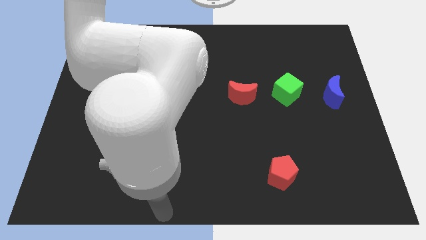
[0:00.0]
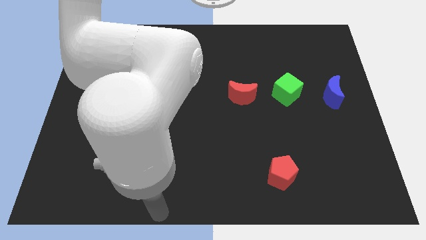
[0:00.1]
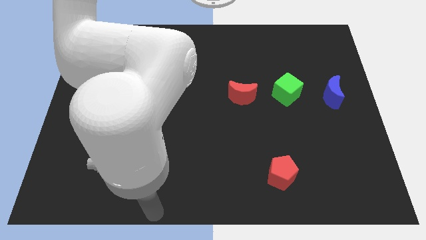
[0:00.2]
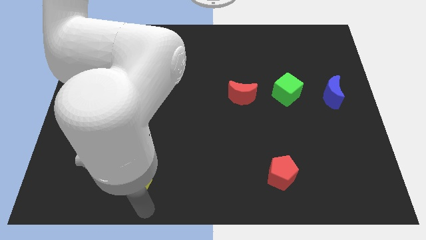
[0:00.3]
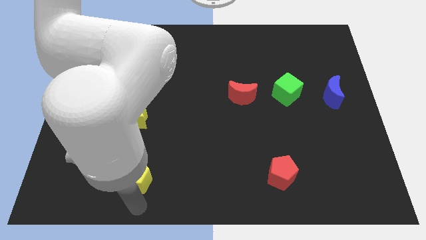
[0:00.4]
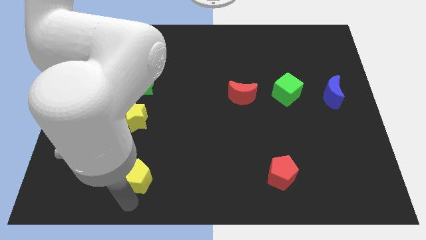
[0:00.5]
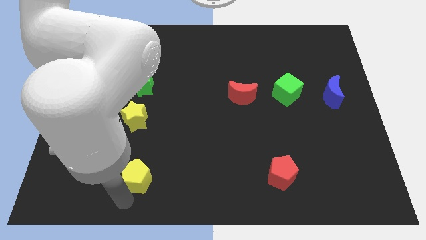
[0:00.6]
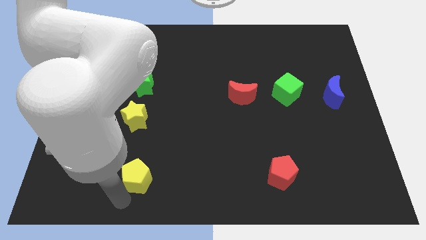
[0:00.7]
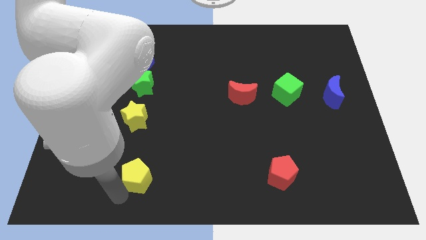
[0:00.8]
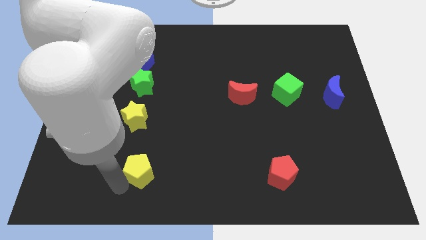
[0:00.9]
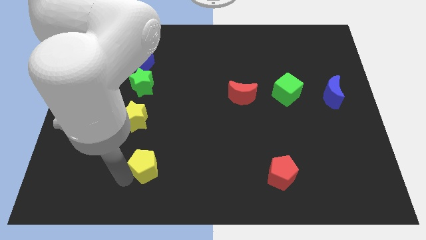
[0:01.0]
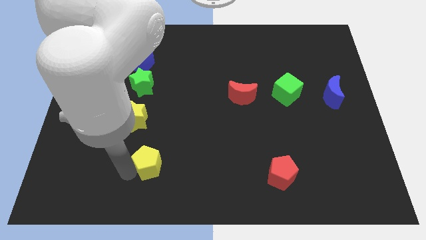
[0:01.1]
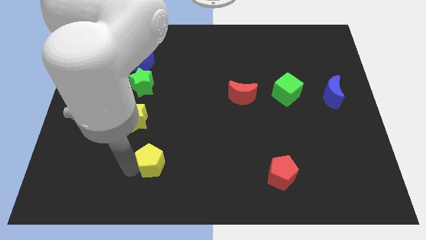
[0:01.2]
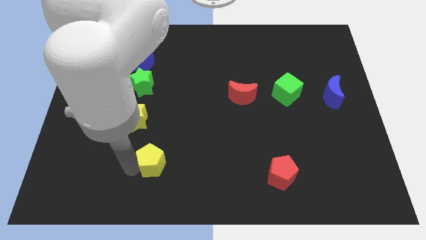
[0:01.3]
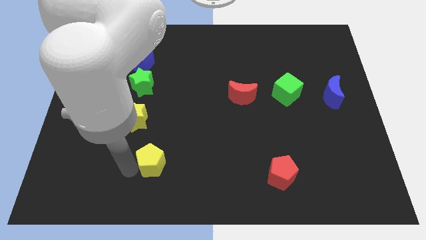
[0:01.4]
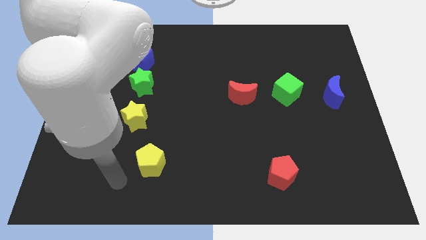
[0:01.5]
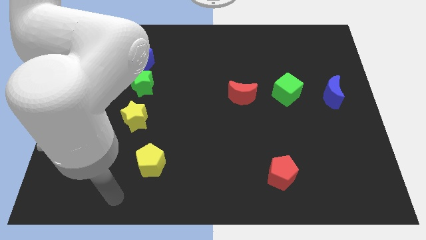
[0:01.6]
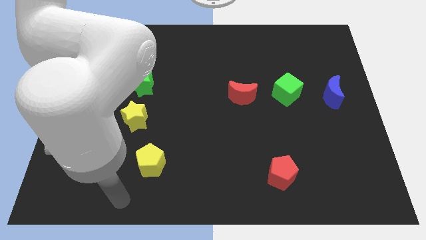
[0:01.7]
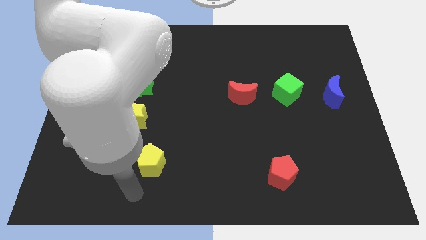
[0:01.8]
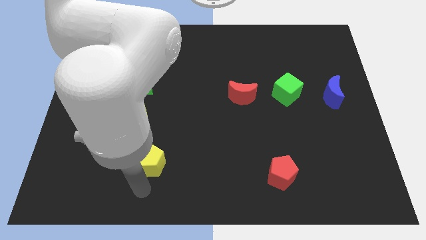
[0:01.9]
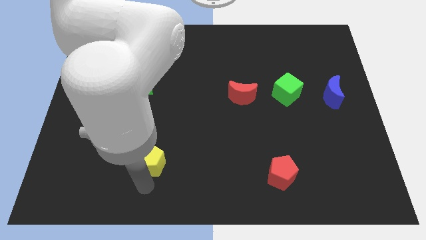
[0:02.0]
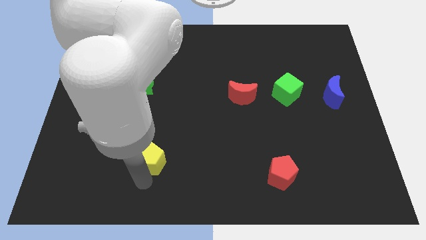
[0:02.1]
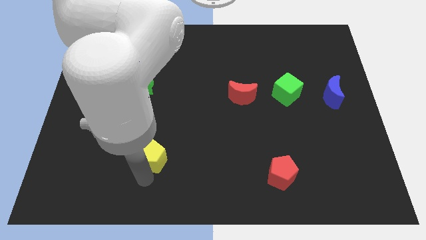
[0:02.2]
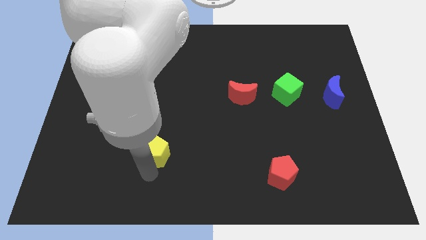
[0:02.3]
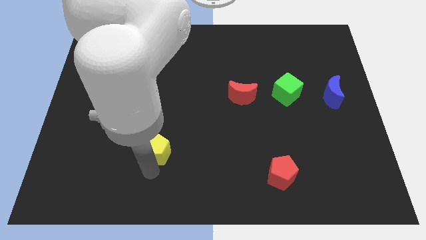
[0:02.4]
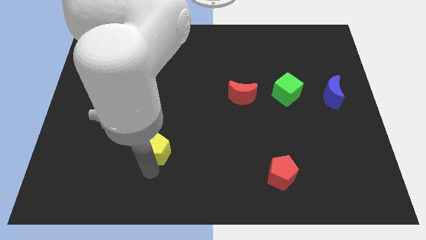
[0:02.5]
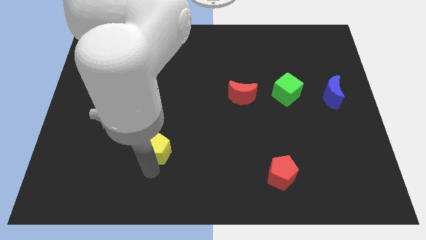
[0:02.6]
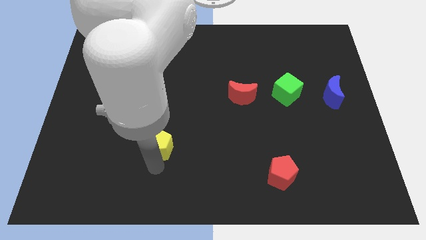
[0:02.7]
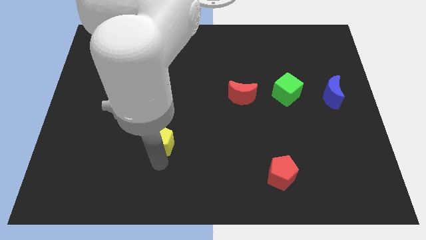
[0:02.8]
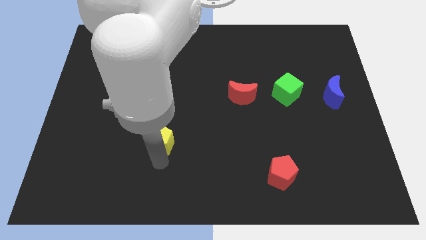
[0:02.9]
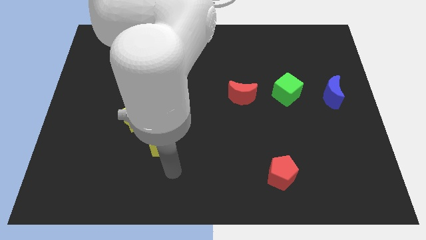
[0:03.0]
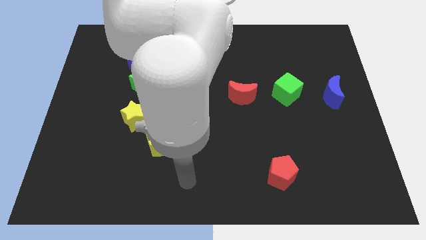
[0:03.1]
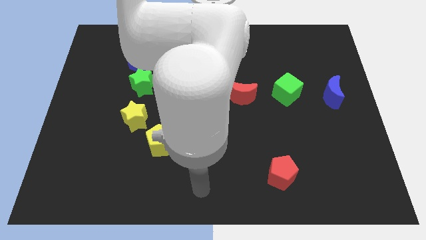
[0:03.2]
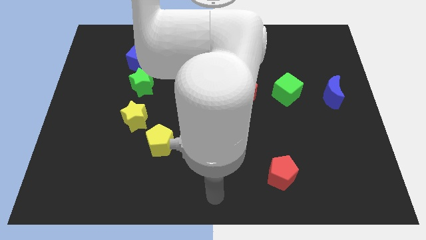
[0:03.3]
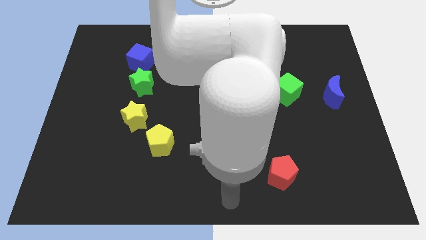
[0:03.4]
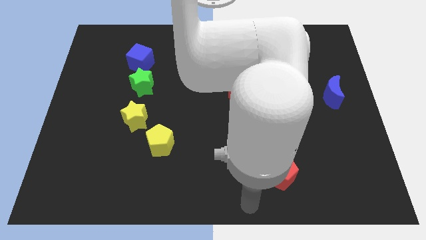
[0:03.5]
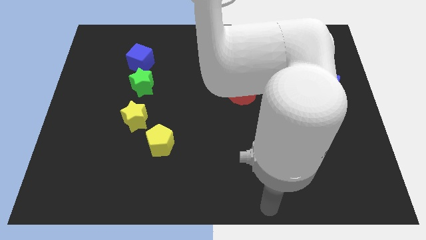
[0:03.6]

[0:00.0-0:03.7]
place yellow pentagon to the bottom right of the yellow star

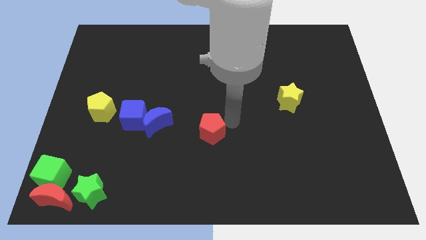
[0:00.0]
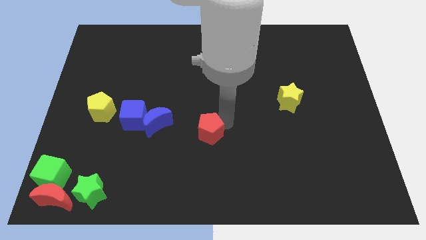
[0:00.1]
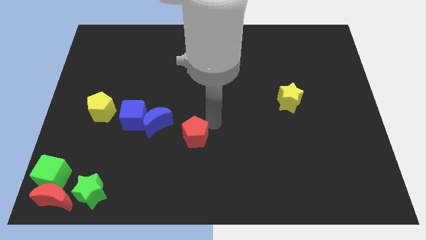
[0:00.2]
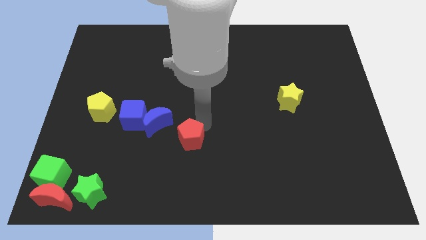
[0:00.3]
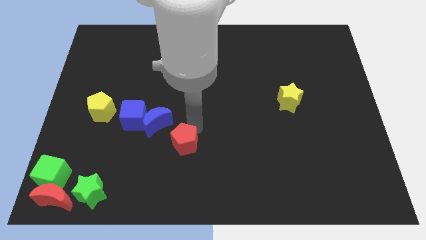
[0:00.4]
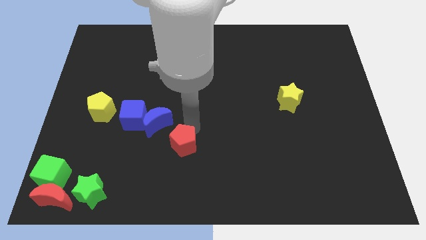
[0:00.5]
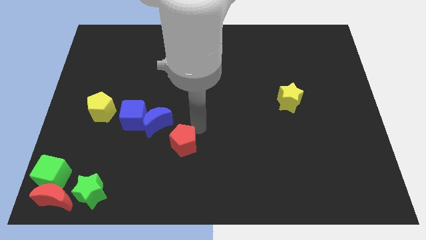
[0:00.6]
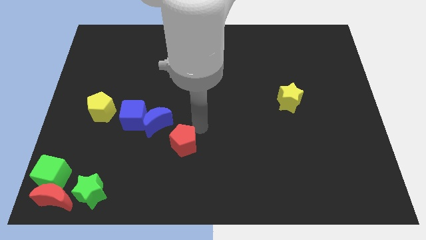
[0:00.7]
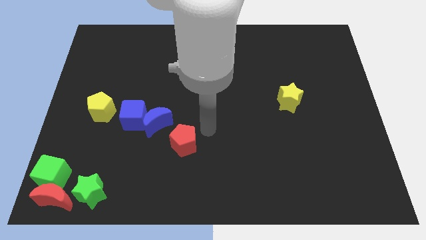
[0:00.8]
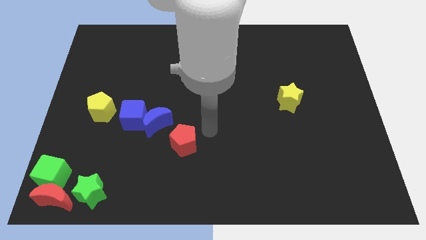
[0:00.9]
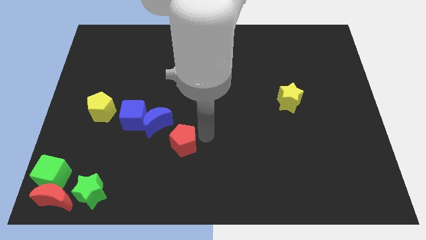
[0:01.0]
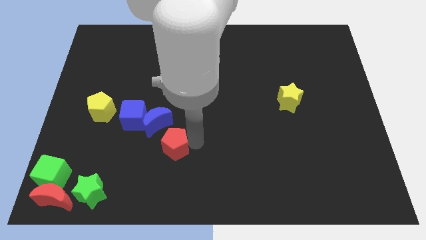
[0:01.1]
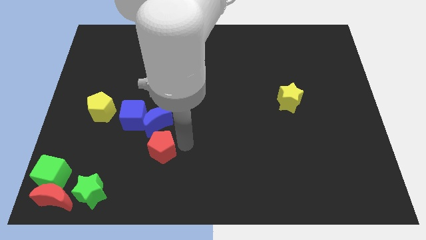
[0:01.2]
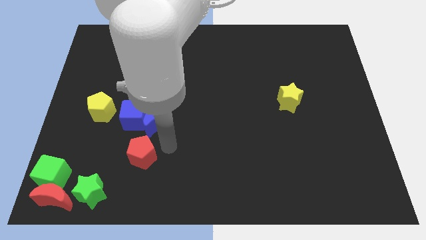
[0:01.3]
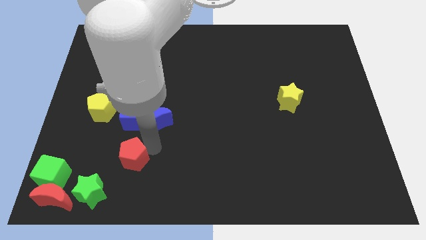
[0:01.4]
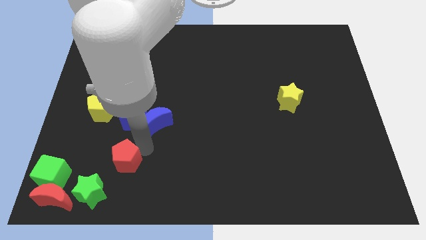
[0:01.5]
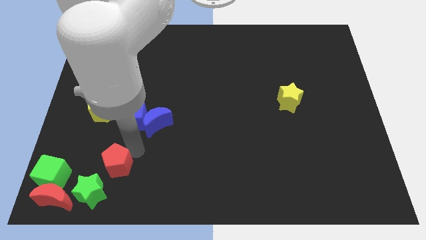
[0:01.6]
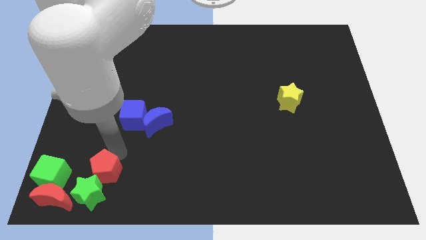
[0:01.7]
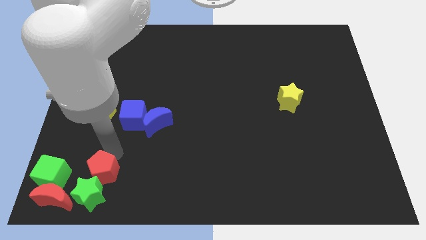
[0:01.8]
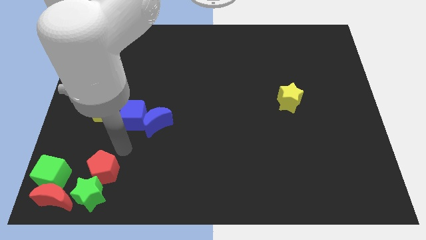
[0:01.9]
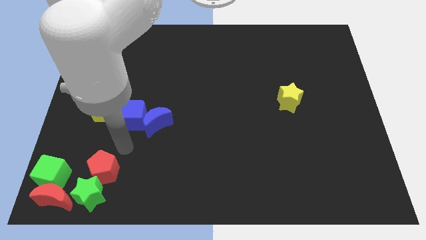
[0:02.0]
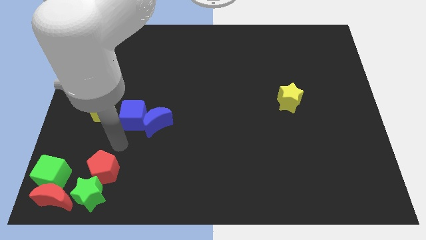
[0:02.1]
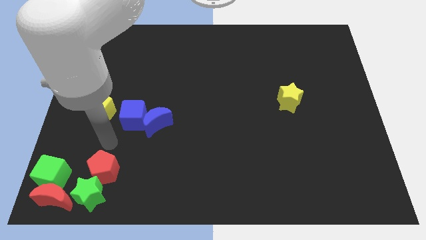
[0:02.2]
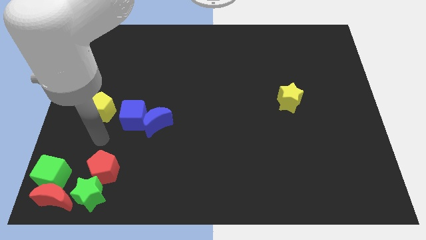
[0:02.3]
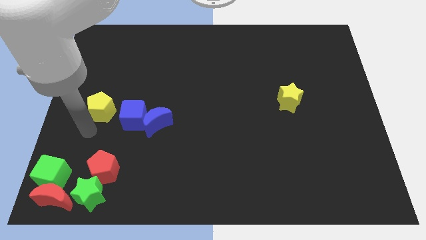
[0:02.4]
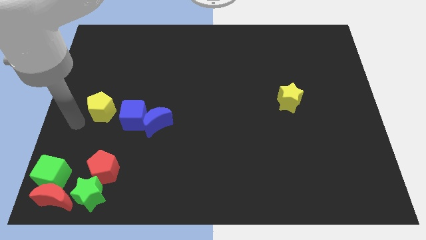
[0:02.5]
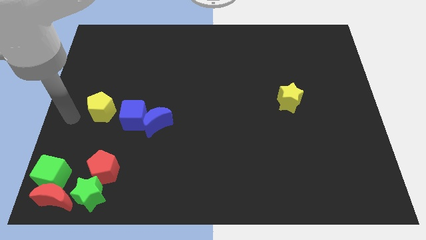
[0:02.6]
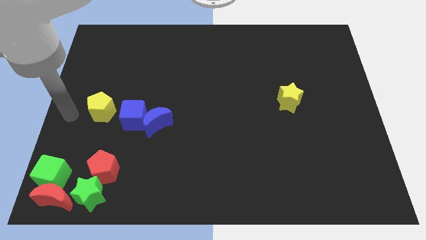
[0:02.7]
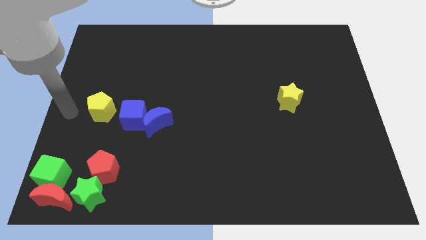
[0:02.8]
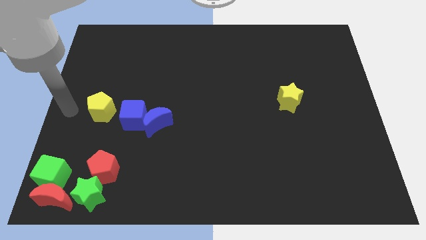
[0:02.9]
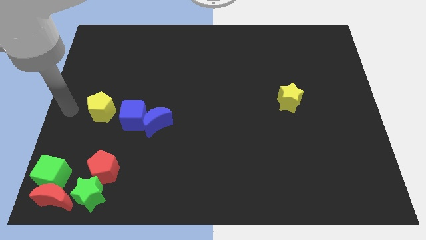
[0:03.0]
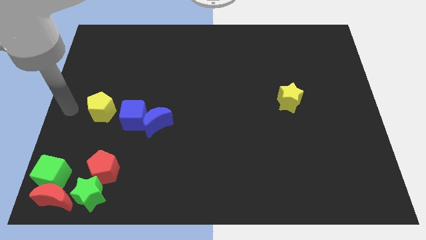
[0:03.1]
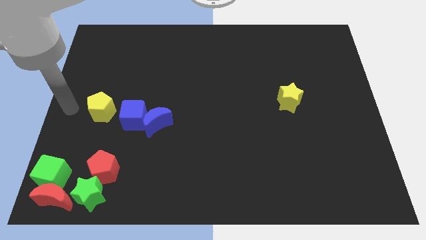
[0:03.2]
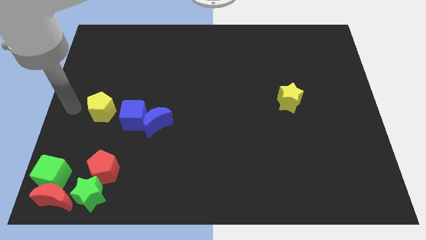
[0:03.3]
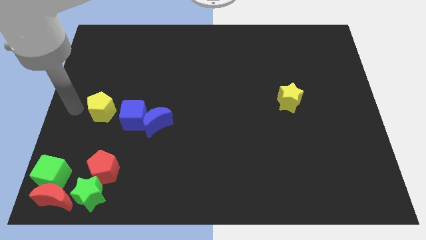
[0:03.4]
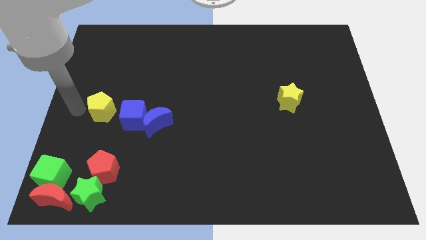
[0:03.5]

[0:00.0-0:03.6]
push the red pentagon to the top right side of the green star

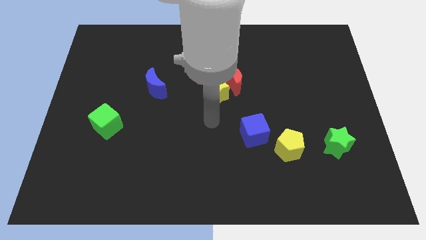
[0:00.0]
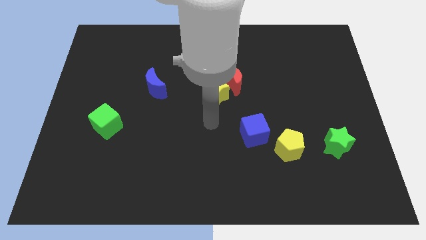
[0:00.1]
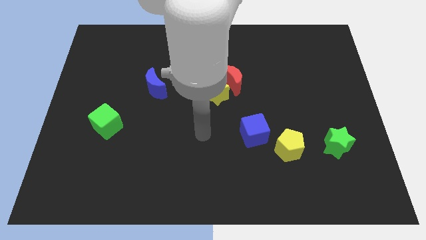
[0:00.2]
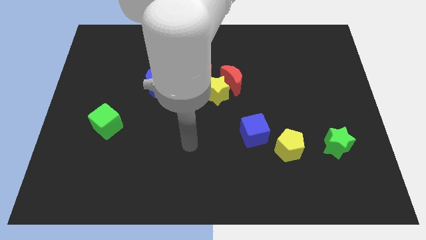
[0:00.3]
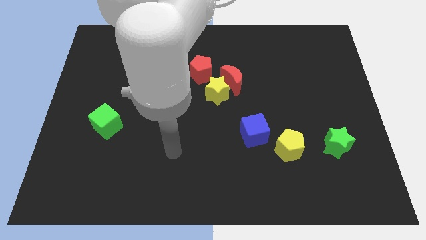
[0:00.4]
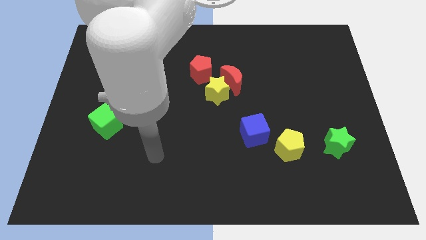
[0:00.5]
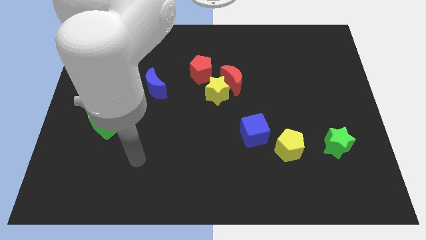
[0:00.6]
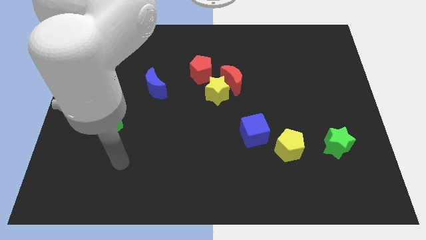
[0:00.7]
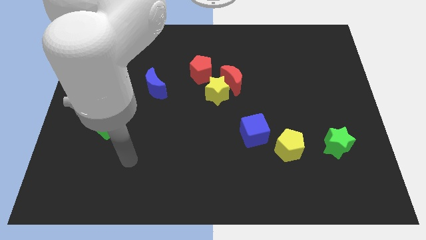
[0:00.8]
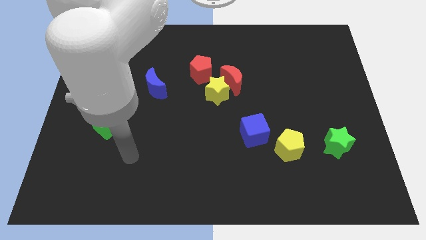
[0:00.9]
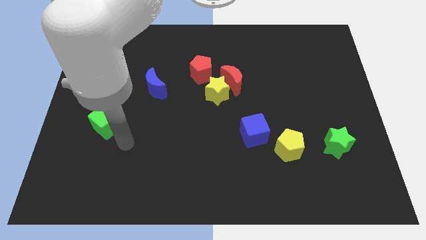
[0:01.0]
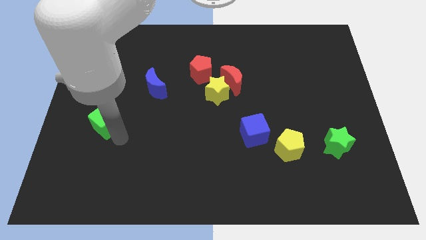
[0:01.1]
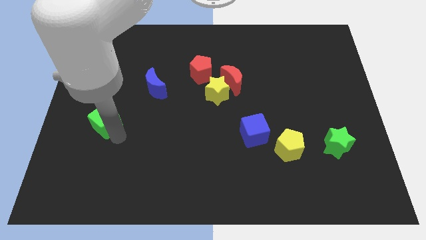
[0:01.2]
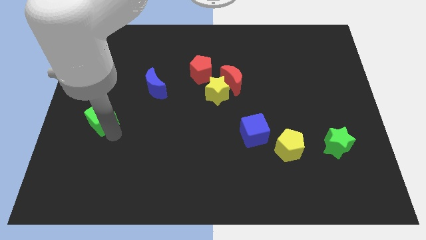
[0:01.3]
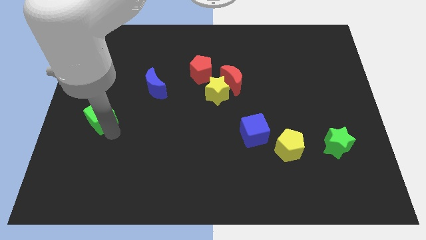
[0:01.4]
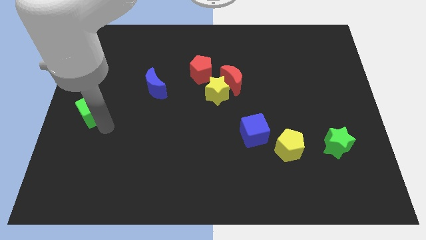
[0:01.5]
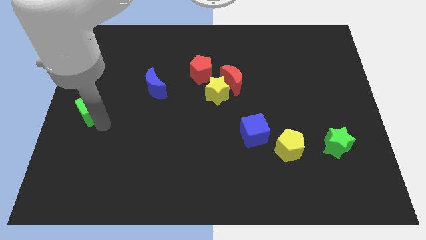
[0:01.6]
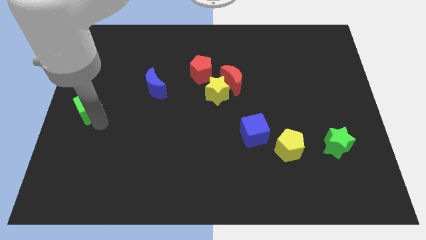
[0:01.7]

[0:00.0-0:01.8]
touch the bottom of green cube
